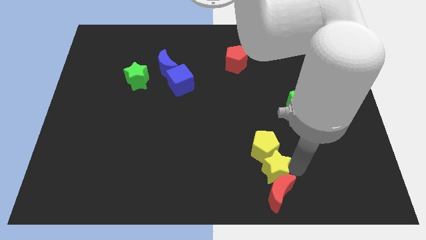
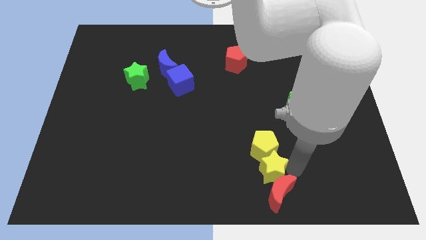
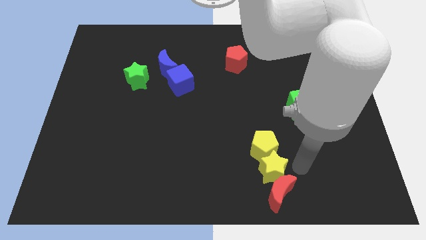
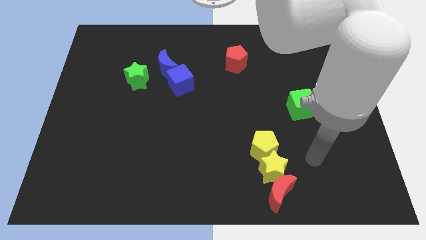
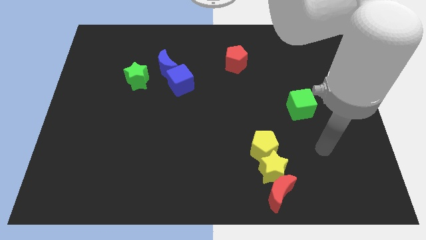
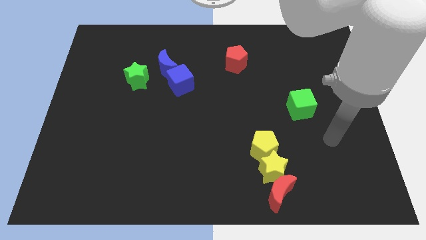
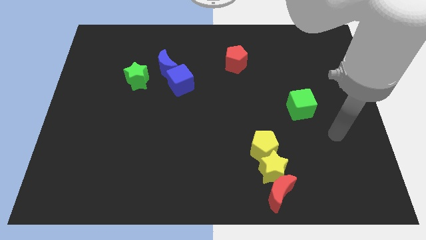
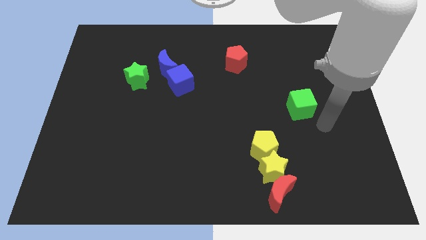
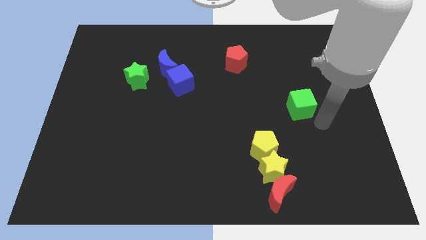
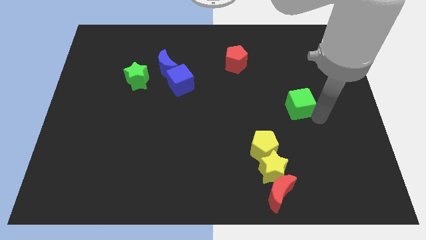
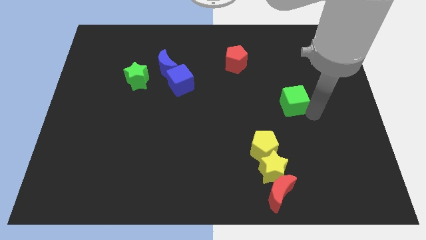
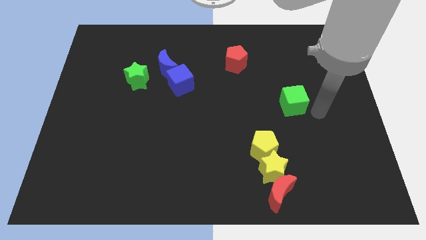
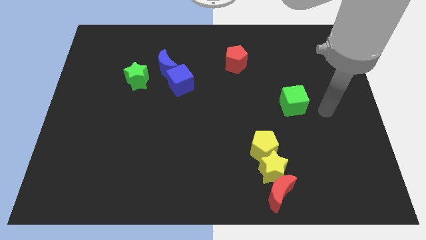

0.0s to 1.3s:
slightly move the green cube diagonally up

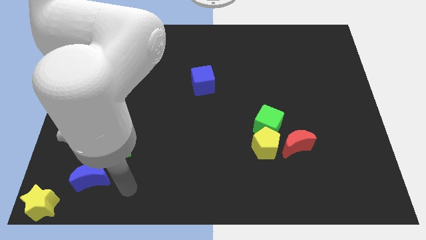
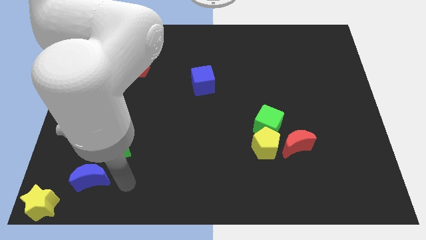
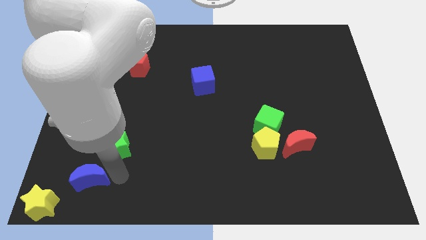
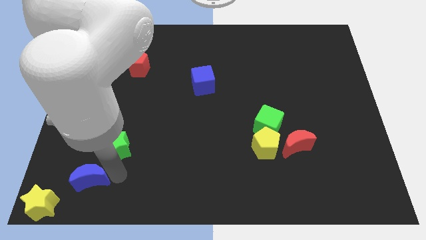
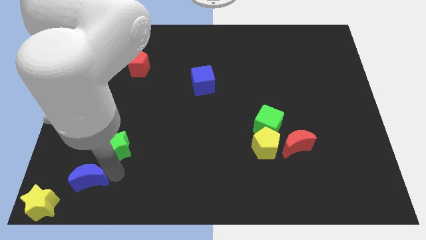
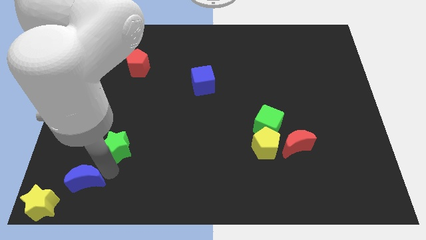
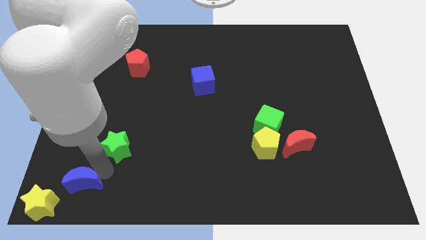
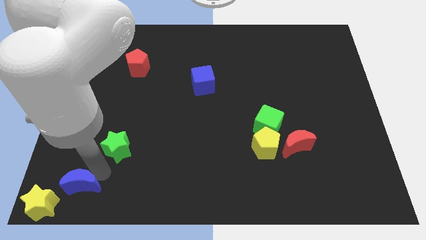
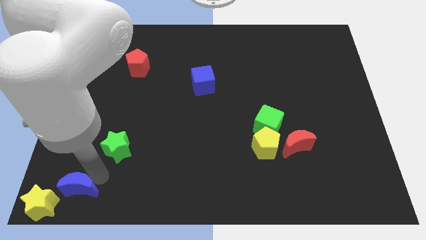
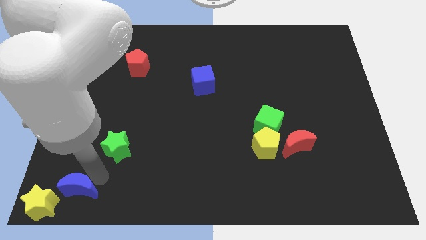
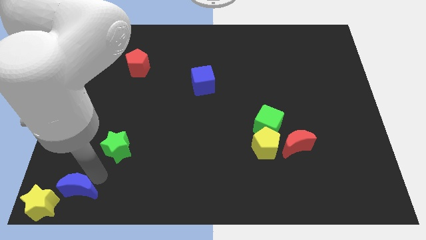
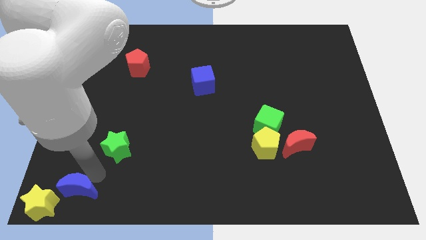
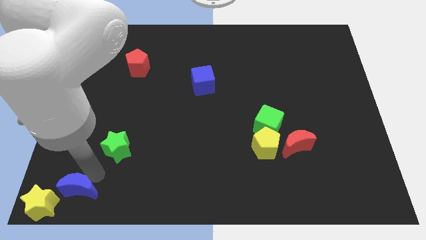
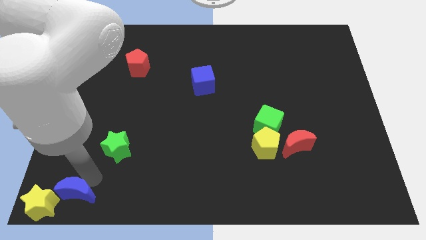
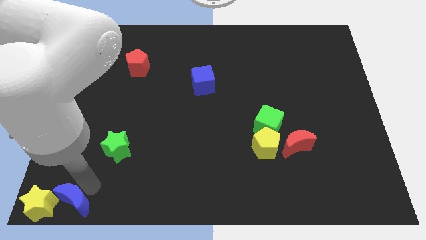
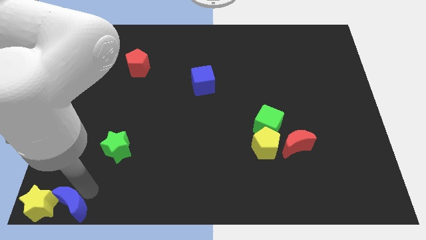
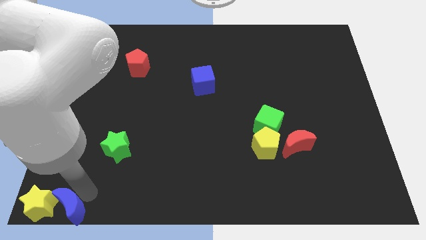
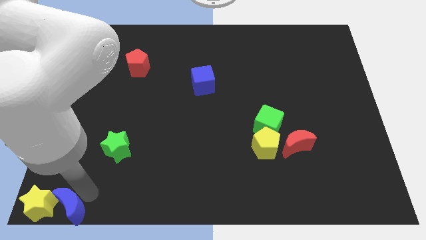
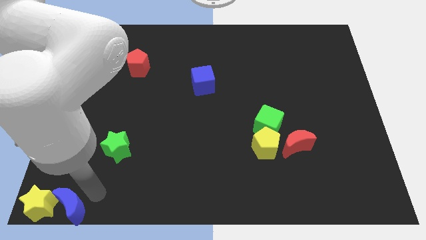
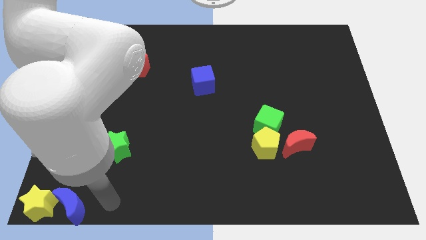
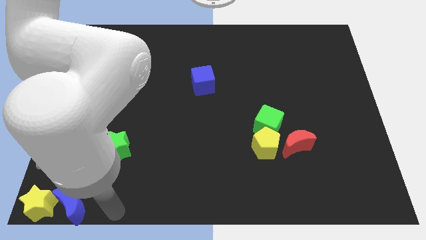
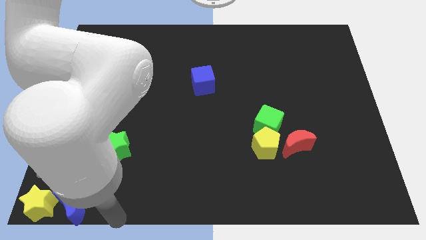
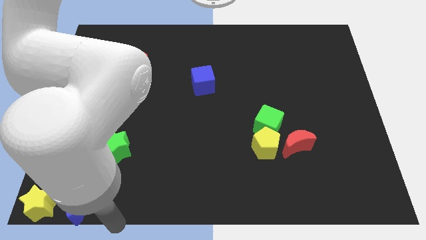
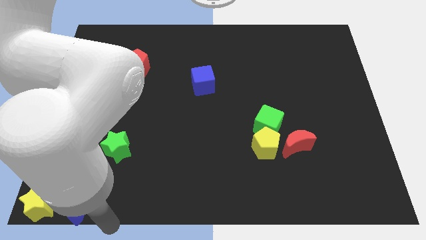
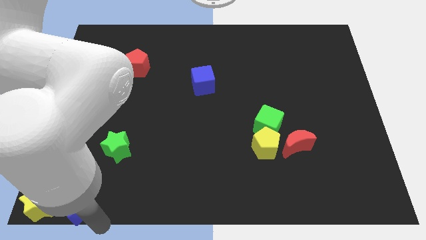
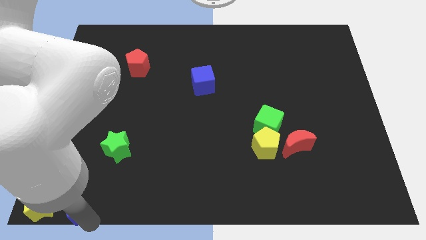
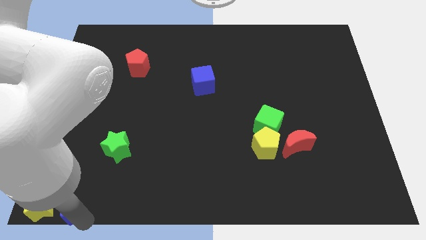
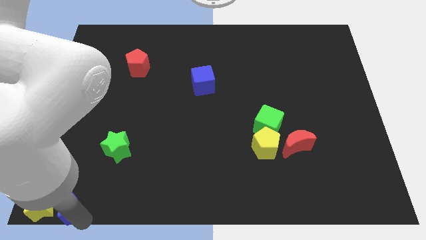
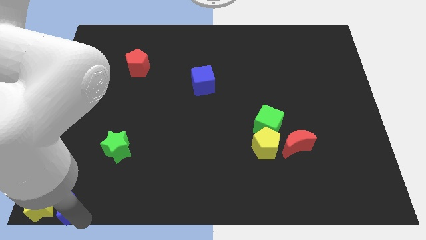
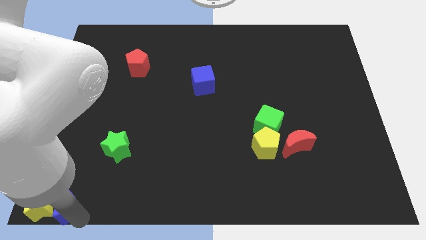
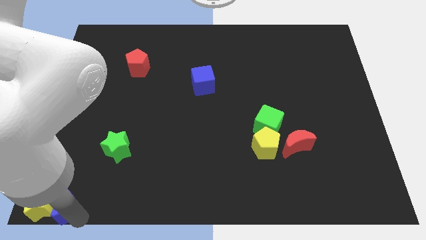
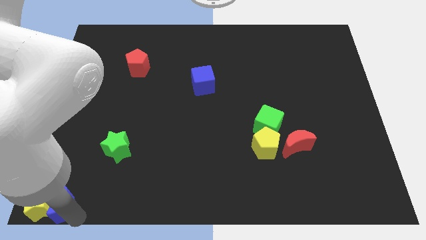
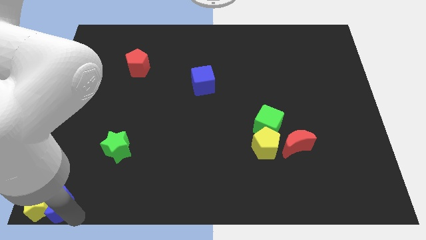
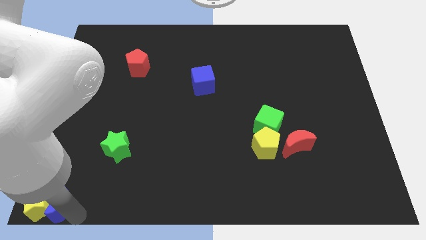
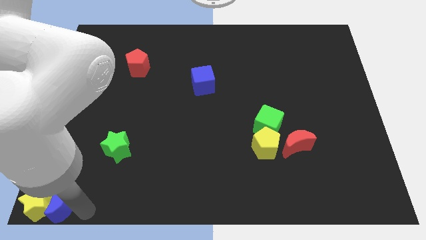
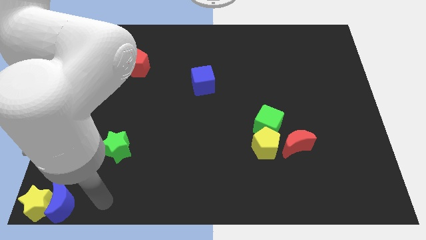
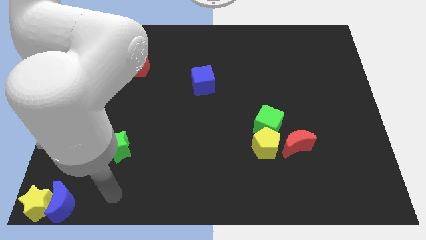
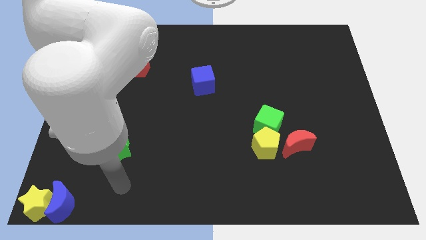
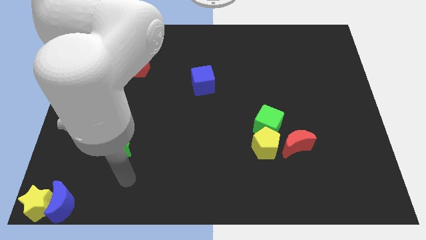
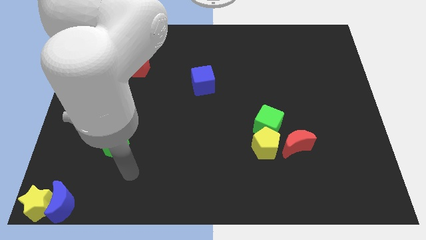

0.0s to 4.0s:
place the blue moon to the right side of the yellow star

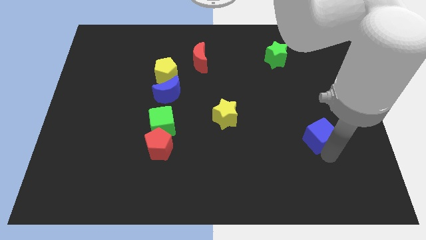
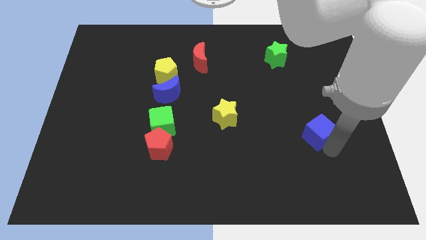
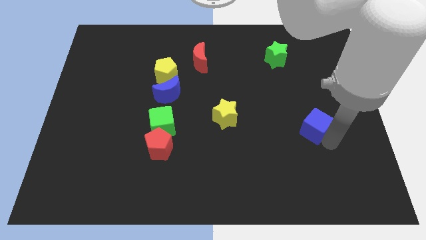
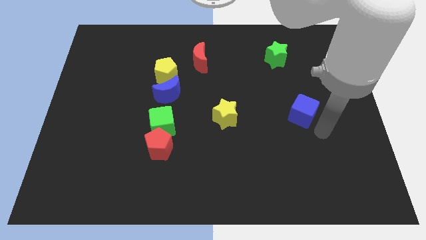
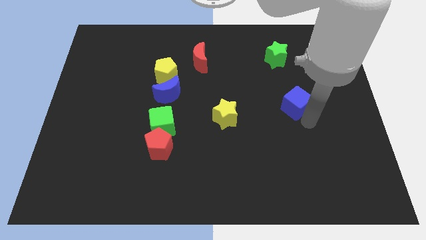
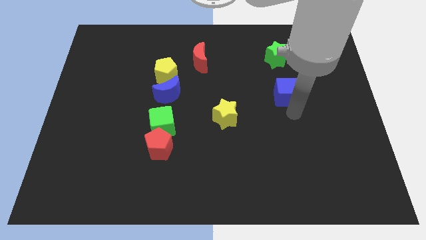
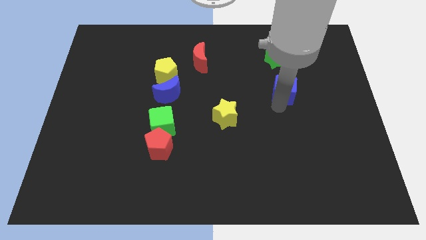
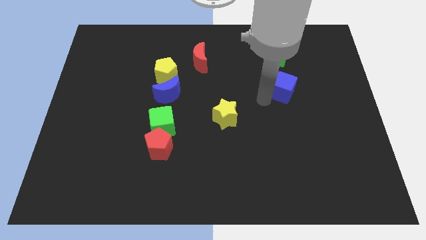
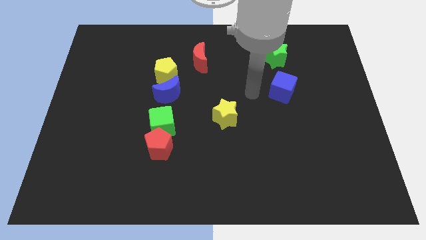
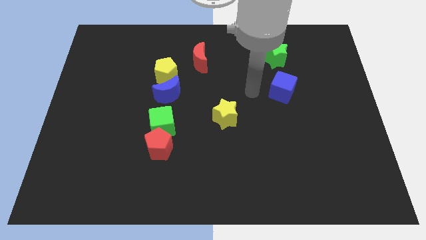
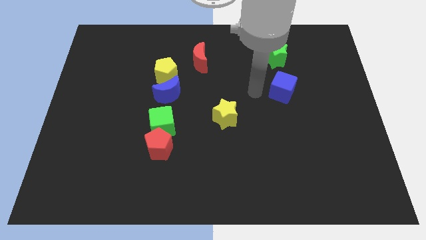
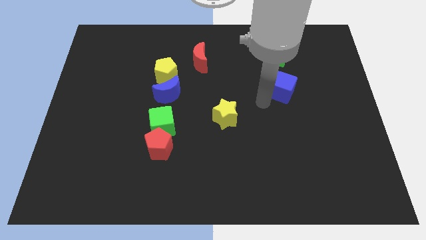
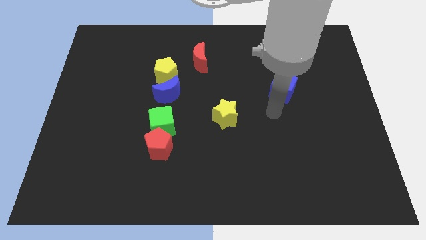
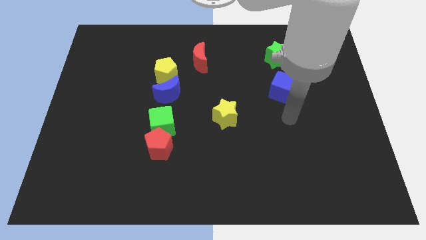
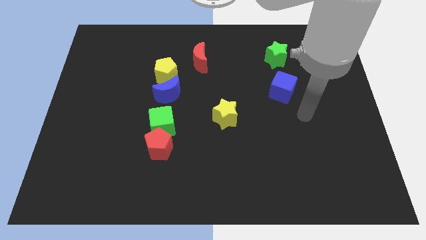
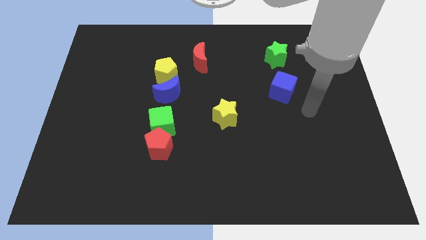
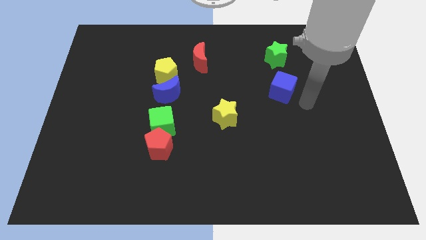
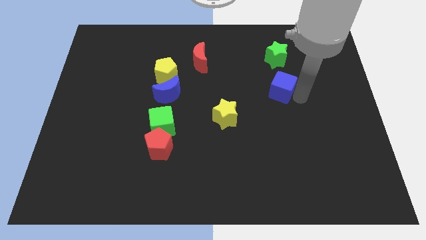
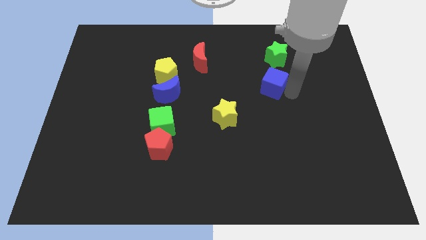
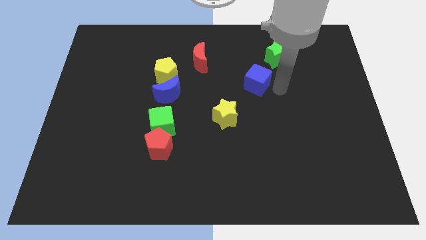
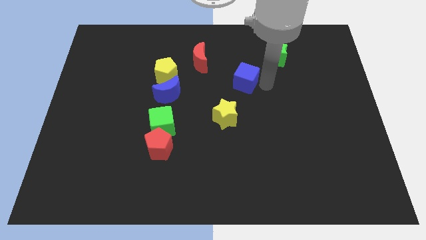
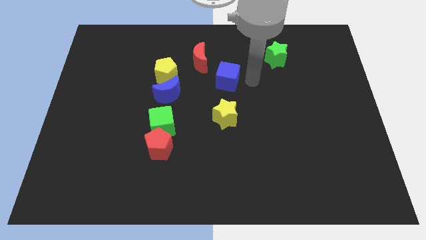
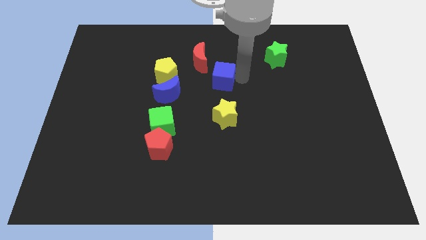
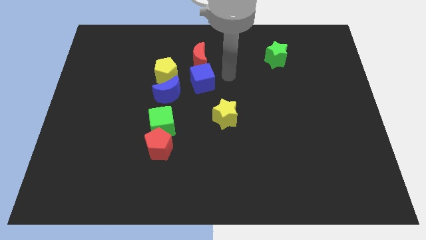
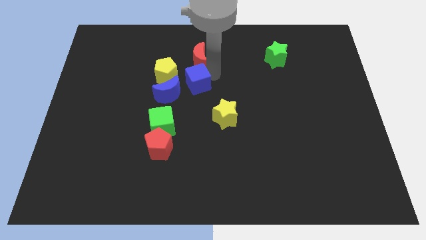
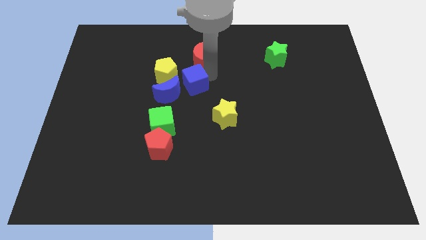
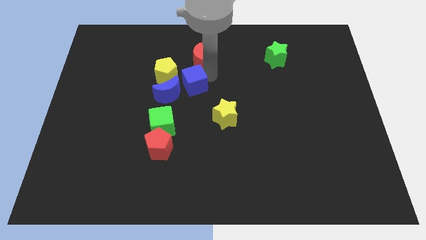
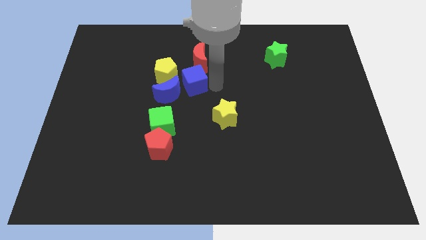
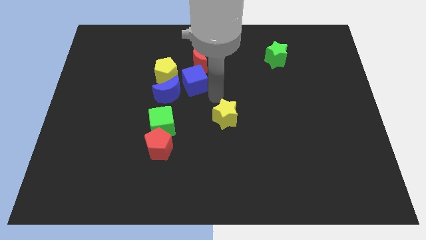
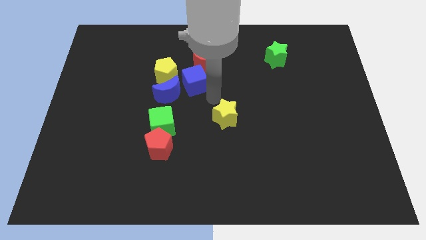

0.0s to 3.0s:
push the blue cube to the right side of the blue moon

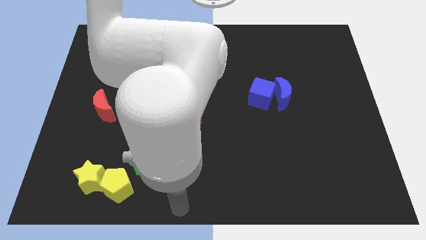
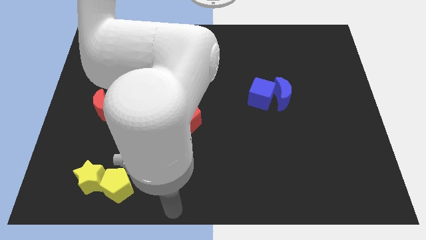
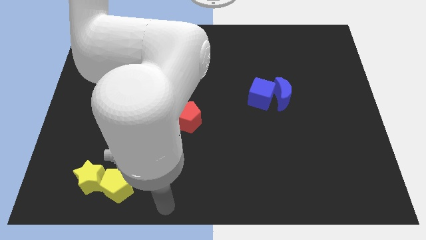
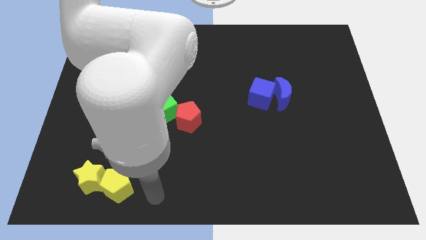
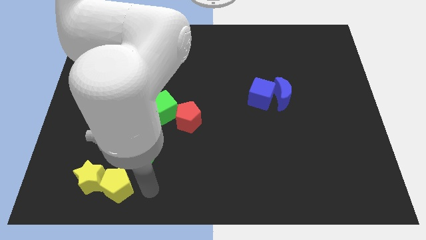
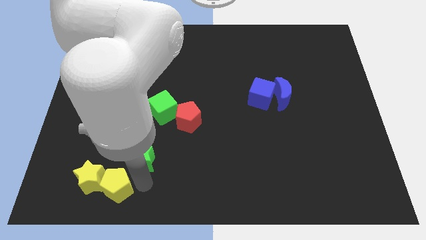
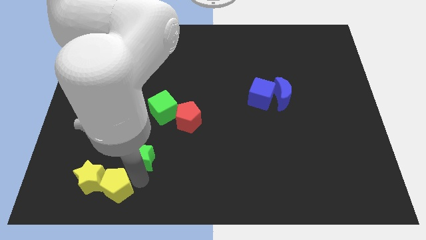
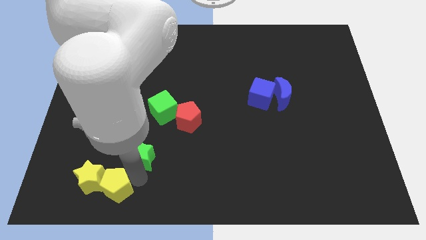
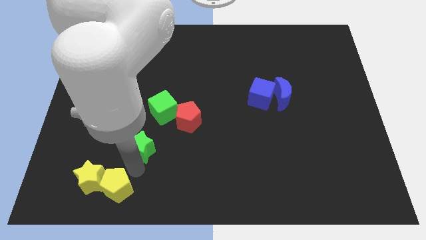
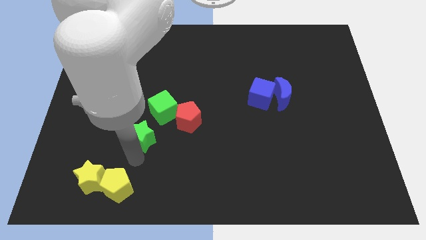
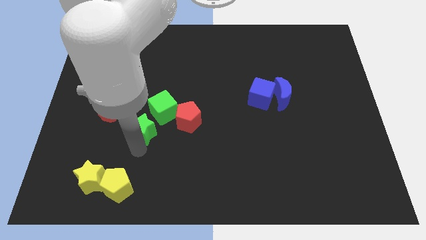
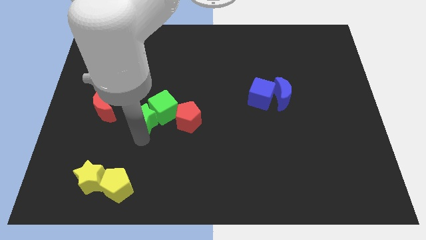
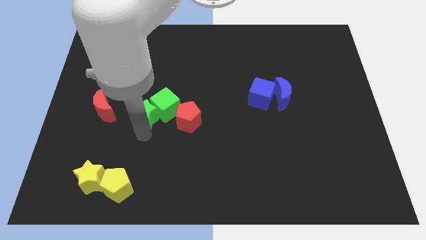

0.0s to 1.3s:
move the green star into the green cube
